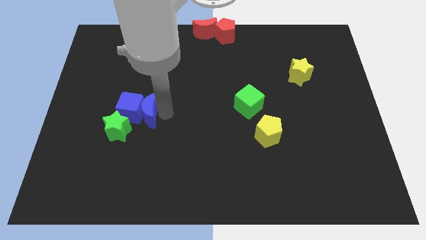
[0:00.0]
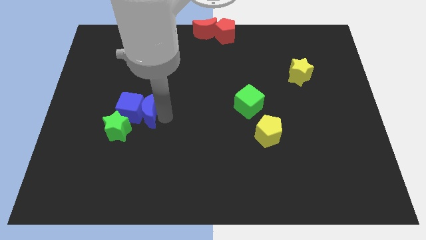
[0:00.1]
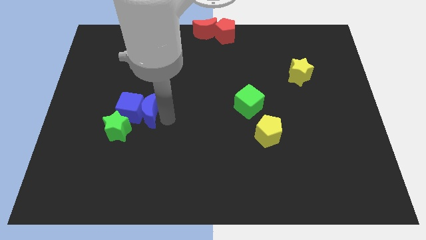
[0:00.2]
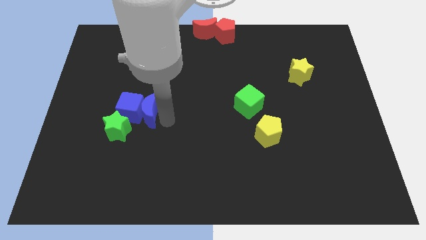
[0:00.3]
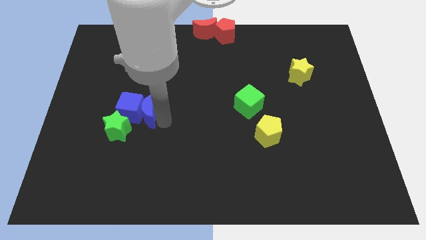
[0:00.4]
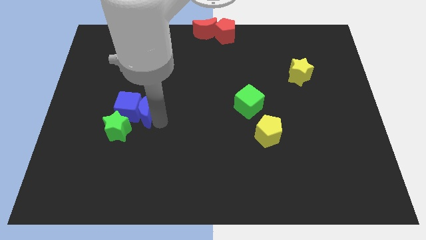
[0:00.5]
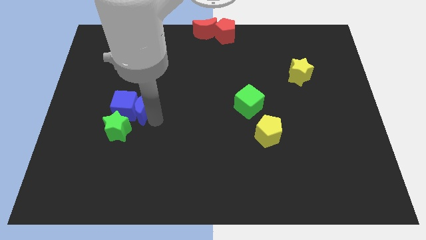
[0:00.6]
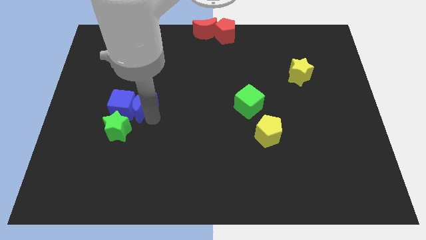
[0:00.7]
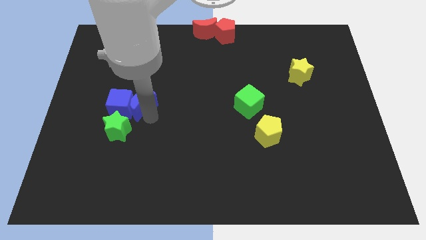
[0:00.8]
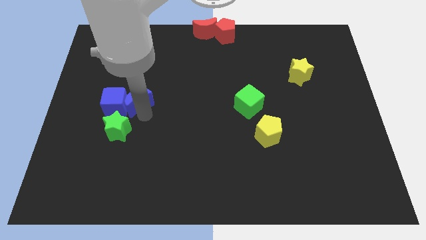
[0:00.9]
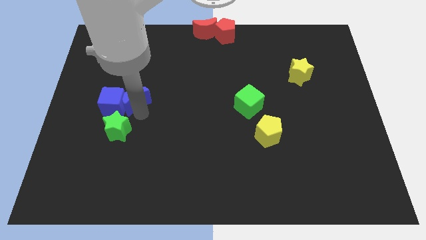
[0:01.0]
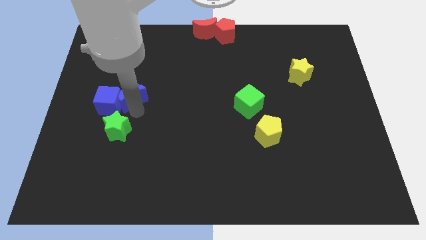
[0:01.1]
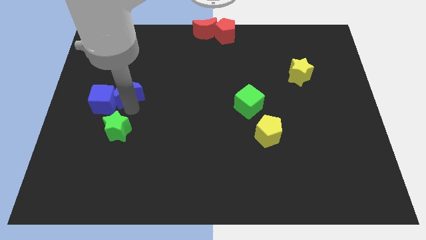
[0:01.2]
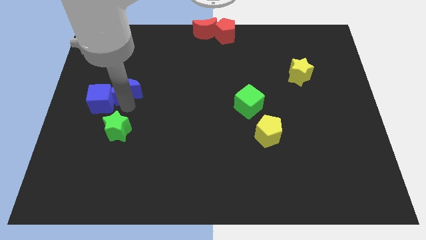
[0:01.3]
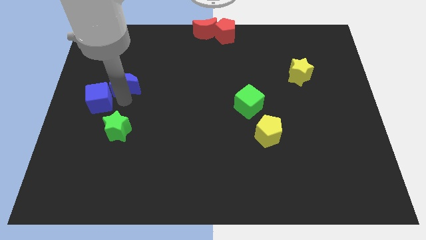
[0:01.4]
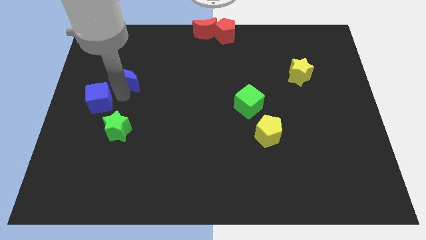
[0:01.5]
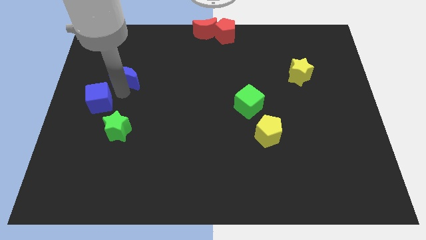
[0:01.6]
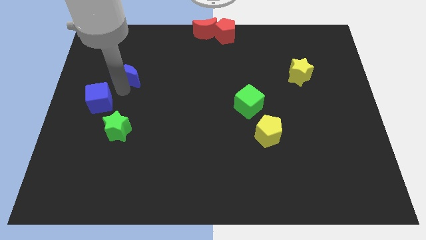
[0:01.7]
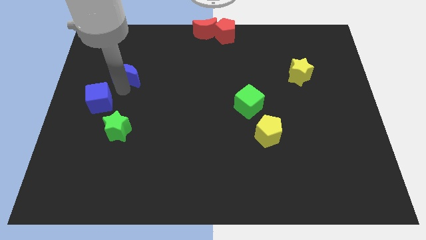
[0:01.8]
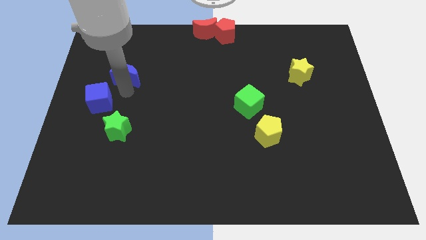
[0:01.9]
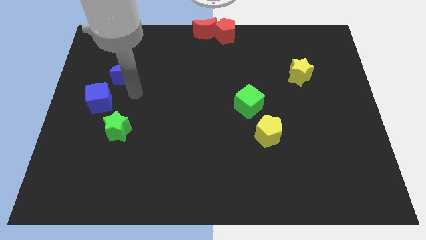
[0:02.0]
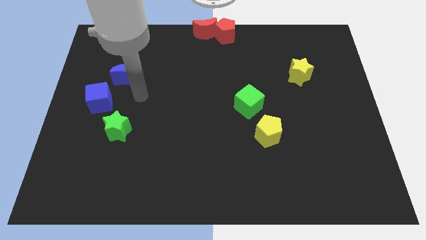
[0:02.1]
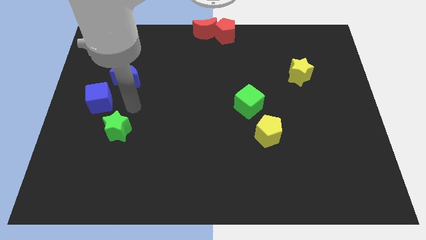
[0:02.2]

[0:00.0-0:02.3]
separate the blue cube and the blue moon

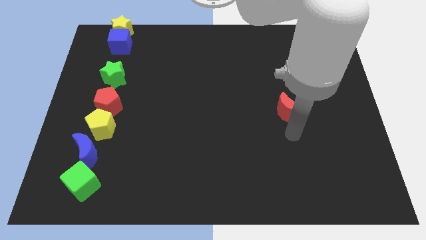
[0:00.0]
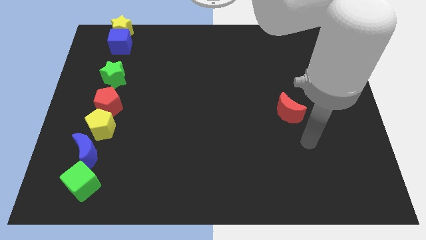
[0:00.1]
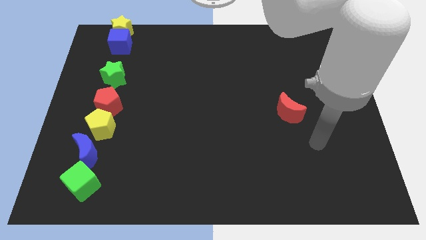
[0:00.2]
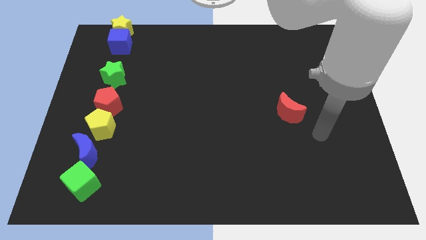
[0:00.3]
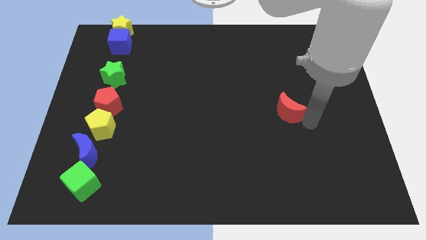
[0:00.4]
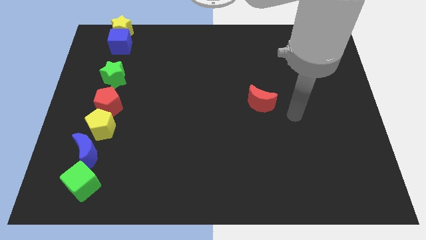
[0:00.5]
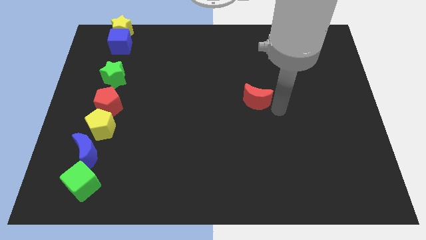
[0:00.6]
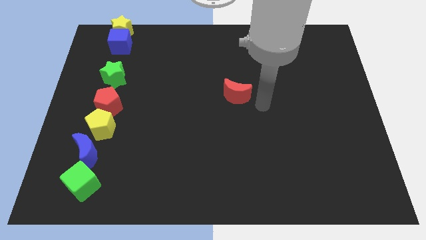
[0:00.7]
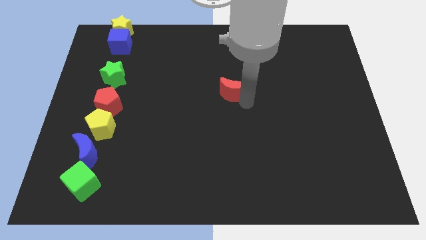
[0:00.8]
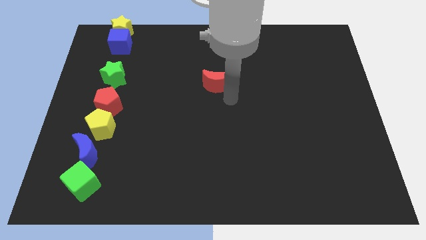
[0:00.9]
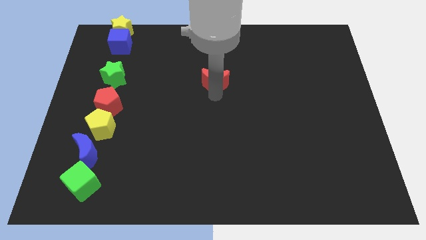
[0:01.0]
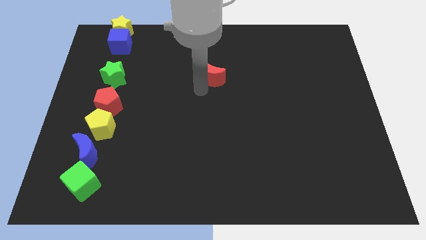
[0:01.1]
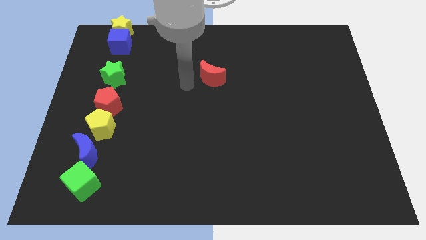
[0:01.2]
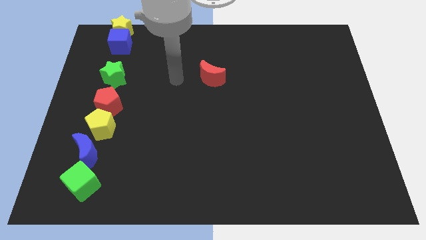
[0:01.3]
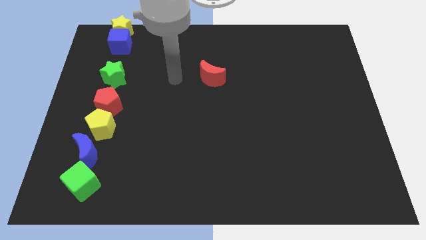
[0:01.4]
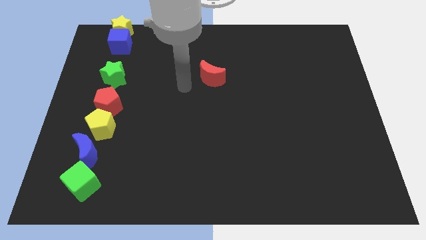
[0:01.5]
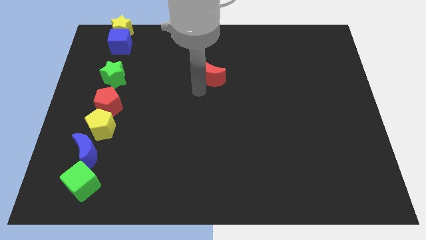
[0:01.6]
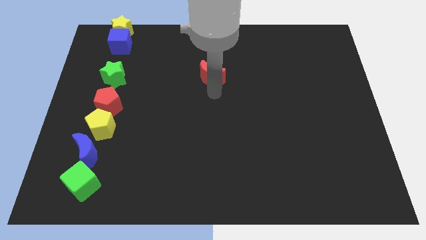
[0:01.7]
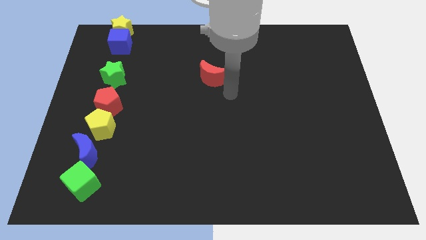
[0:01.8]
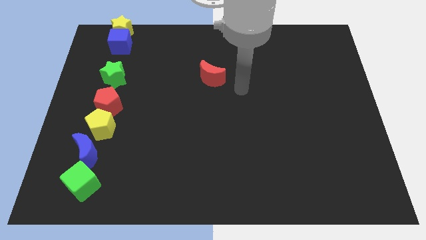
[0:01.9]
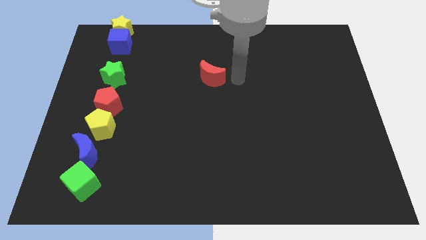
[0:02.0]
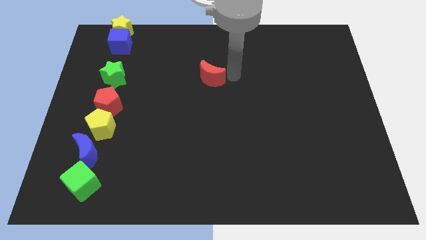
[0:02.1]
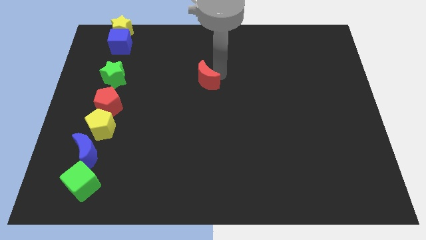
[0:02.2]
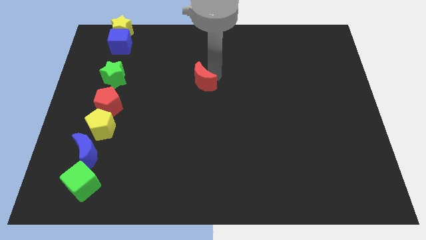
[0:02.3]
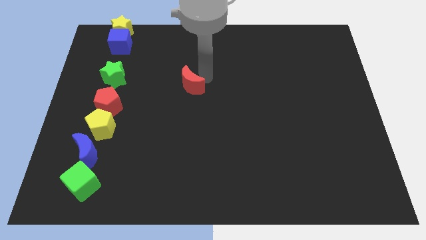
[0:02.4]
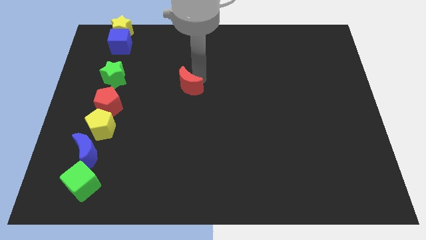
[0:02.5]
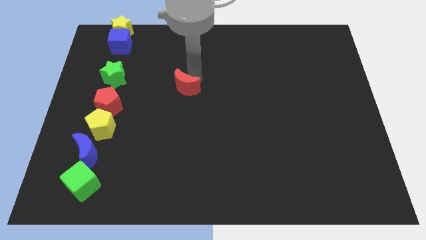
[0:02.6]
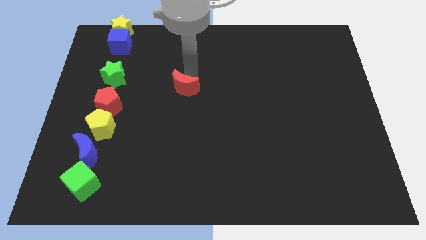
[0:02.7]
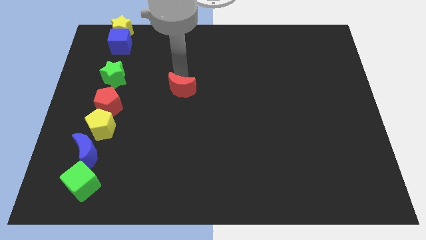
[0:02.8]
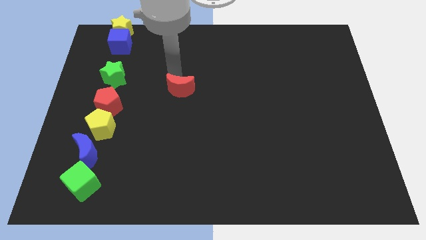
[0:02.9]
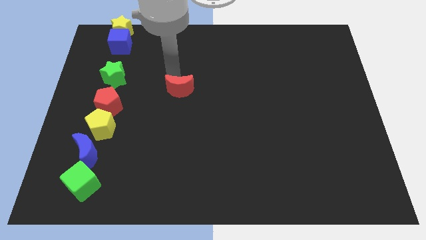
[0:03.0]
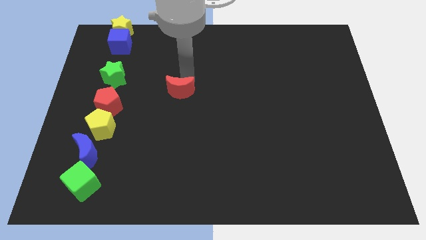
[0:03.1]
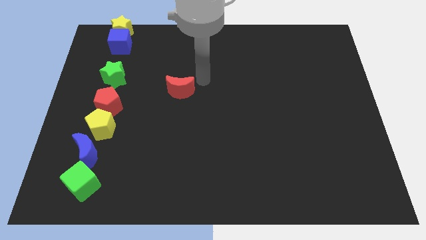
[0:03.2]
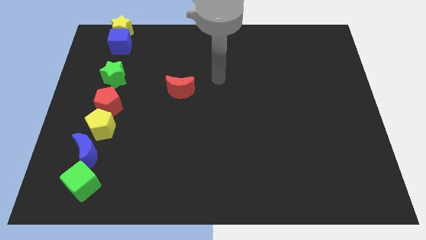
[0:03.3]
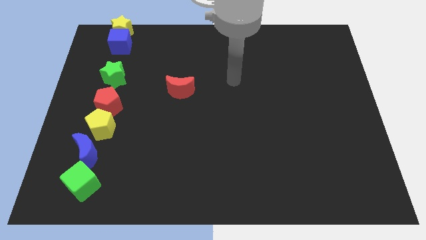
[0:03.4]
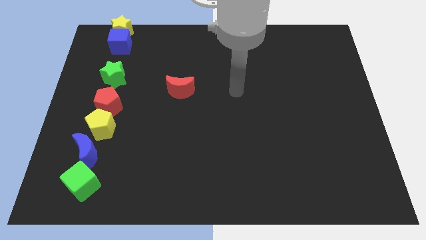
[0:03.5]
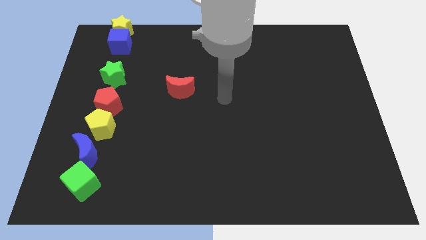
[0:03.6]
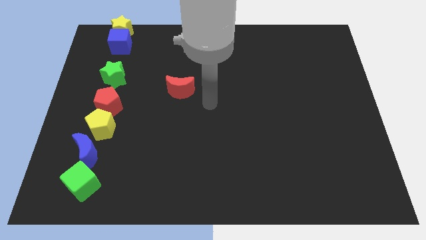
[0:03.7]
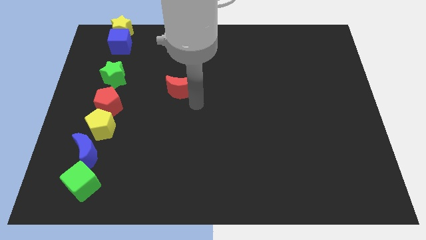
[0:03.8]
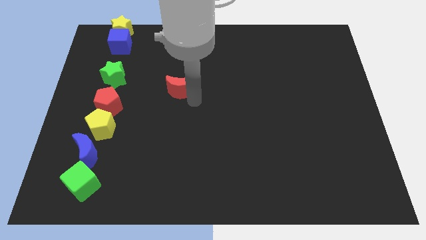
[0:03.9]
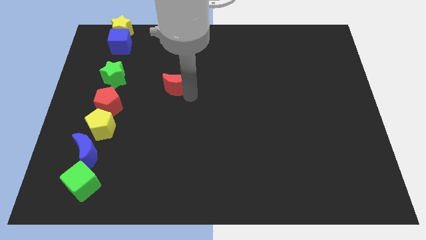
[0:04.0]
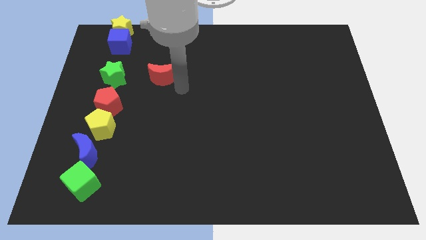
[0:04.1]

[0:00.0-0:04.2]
drag the red moon right to the green star

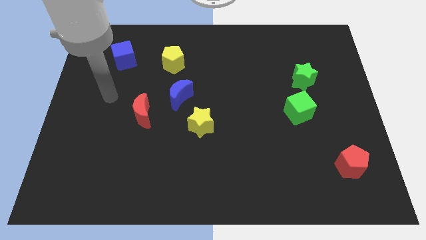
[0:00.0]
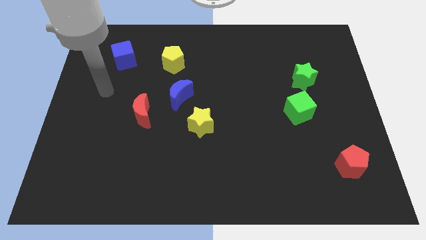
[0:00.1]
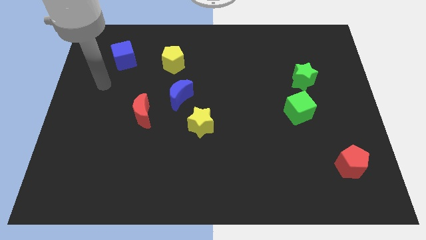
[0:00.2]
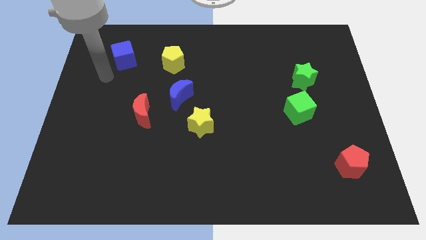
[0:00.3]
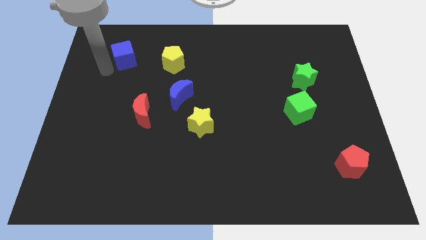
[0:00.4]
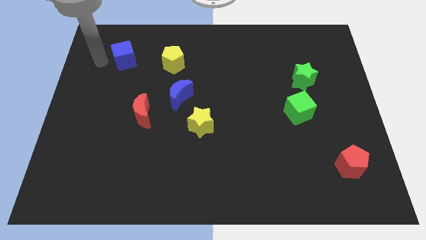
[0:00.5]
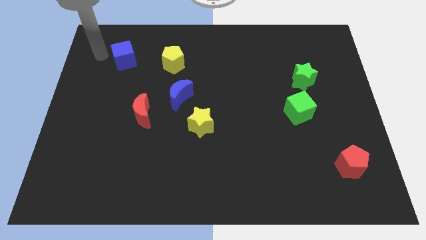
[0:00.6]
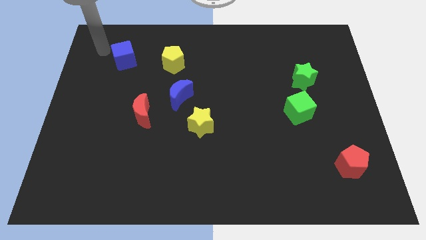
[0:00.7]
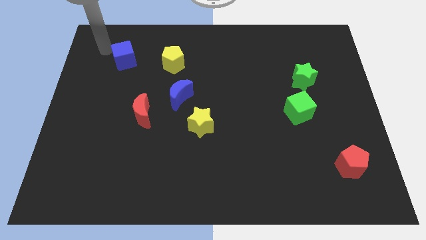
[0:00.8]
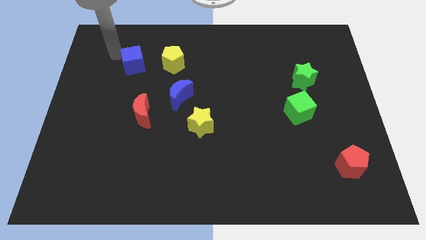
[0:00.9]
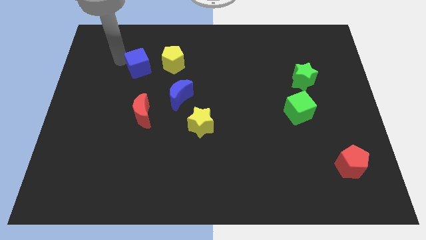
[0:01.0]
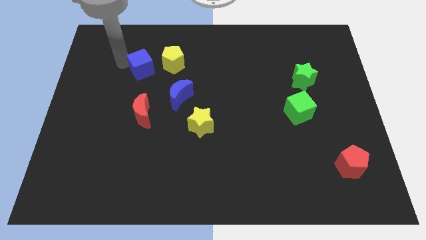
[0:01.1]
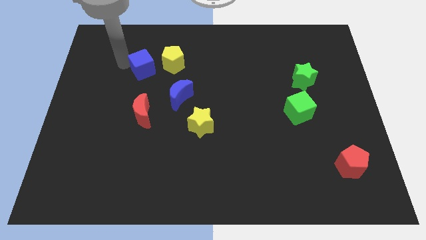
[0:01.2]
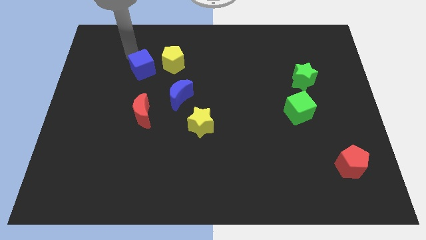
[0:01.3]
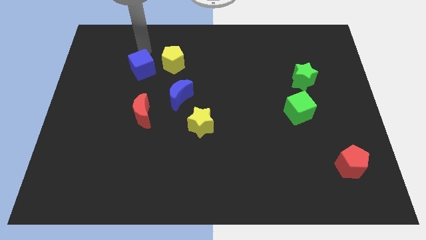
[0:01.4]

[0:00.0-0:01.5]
push blue cube towards the yellow pentagon

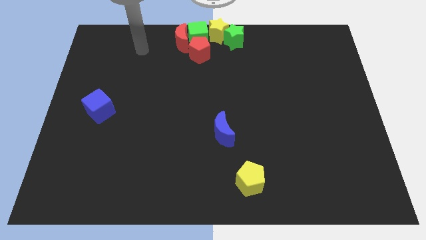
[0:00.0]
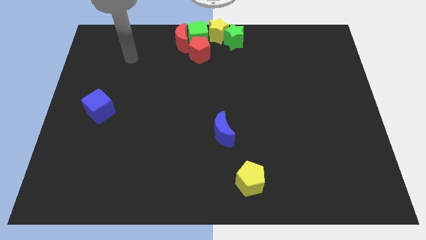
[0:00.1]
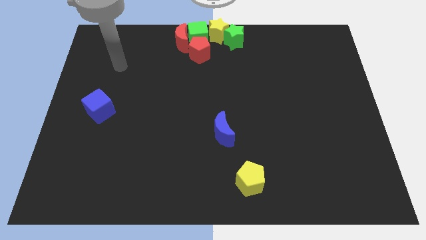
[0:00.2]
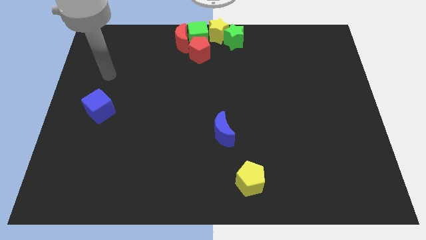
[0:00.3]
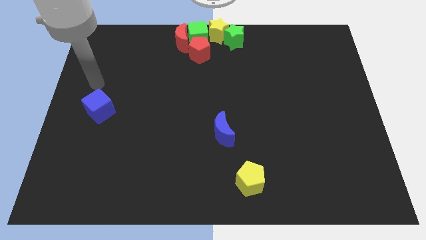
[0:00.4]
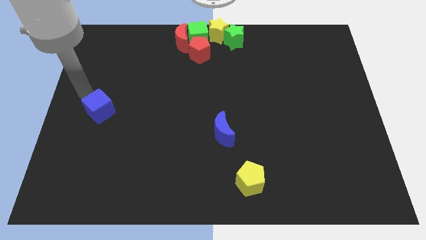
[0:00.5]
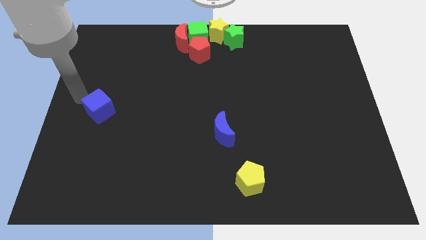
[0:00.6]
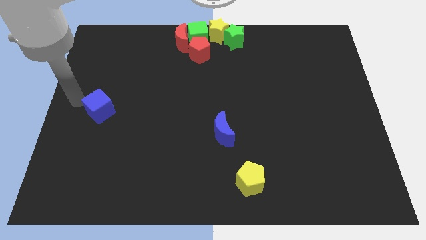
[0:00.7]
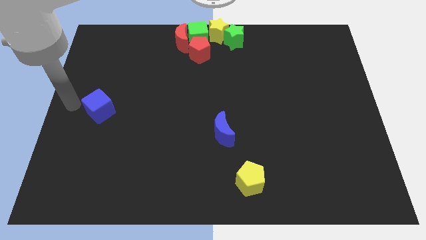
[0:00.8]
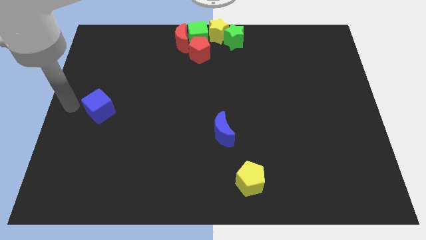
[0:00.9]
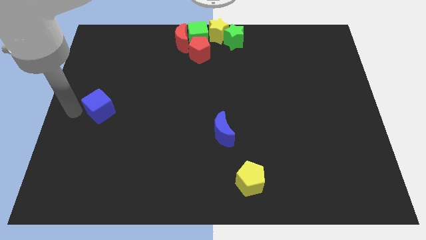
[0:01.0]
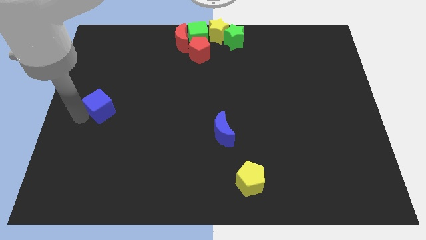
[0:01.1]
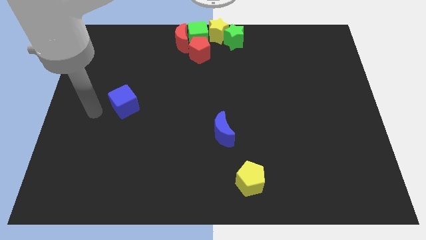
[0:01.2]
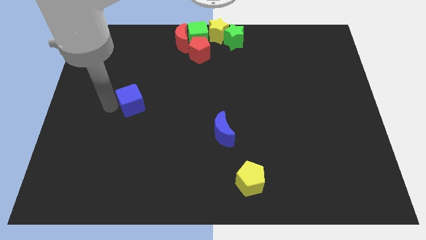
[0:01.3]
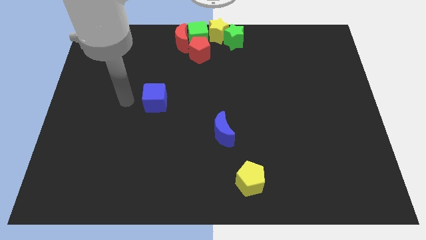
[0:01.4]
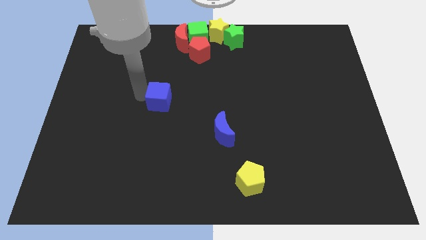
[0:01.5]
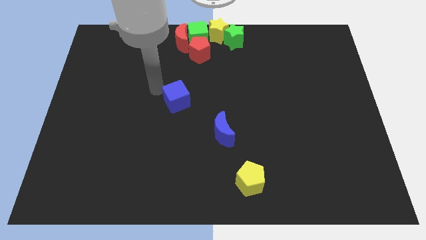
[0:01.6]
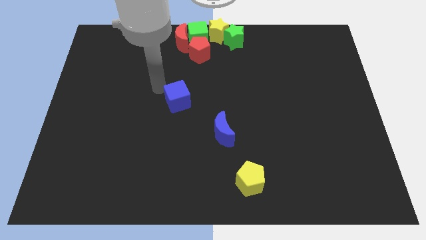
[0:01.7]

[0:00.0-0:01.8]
drag the blue cube towards the group of blocks at the top center of the board
